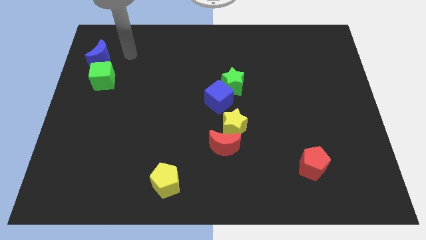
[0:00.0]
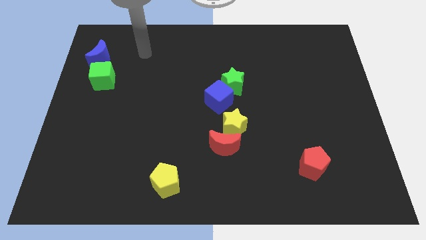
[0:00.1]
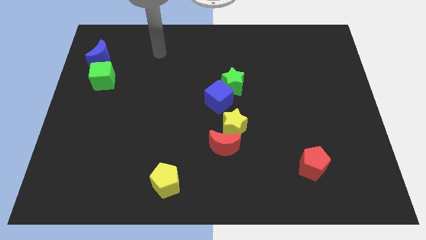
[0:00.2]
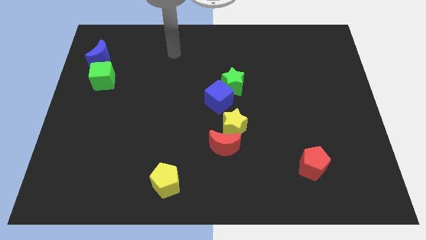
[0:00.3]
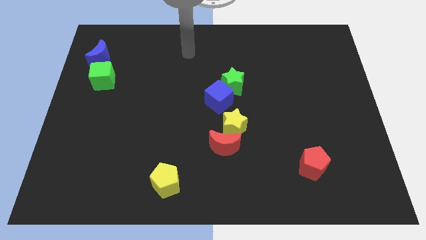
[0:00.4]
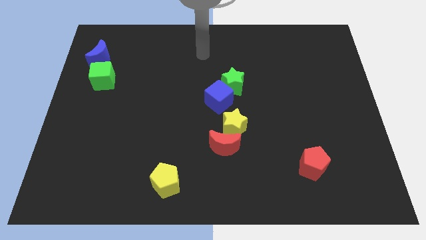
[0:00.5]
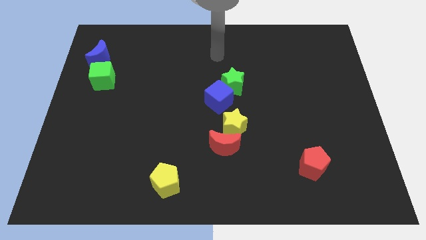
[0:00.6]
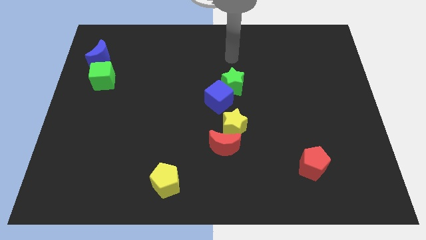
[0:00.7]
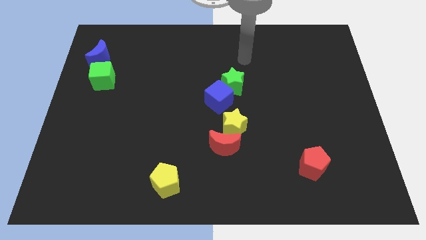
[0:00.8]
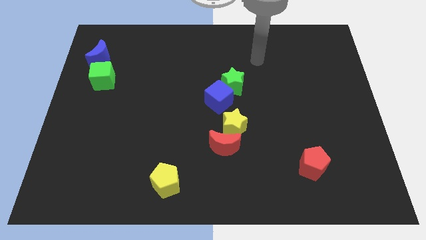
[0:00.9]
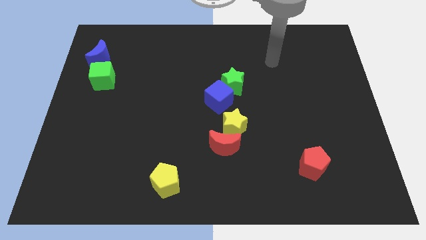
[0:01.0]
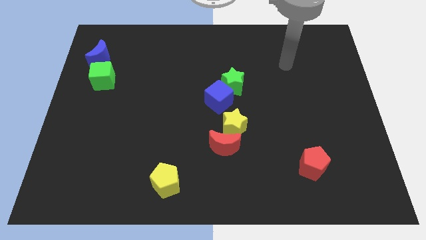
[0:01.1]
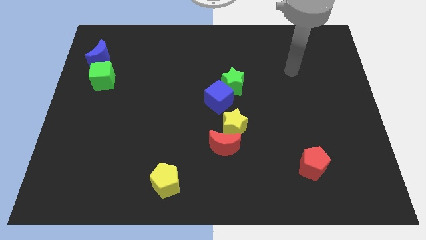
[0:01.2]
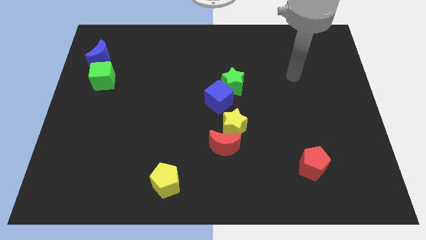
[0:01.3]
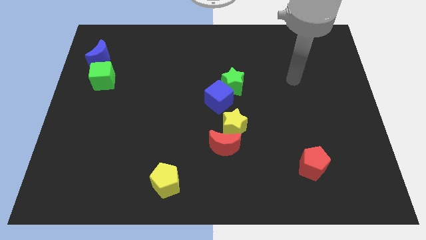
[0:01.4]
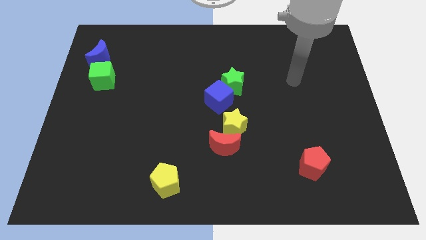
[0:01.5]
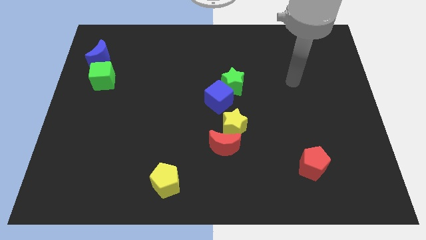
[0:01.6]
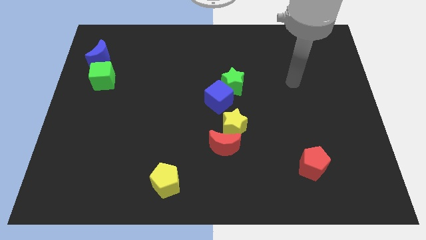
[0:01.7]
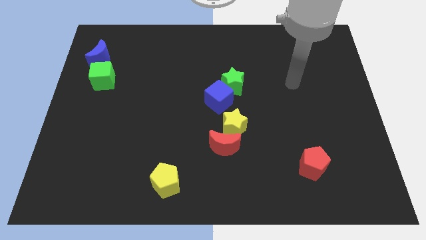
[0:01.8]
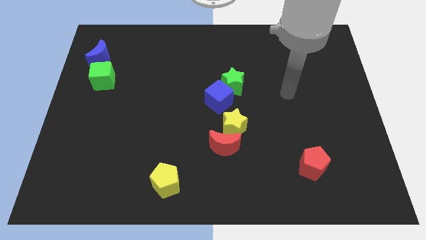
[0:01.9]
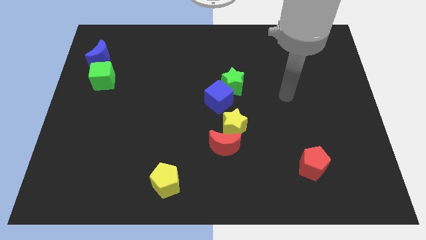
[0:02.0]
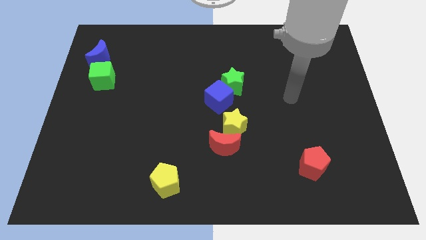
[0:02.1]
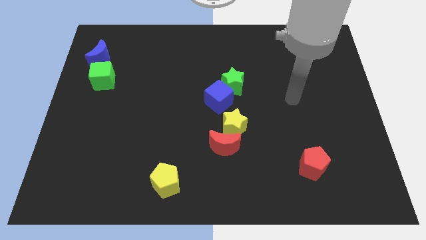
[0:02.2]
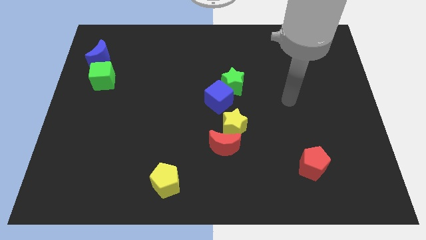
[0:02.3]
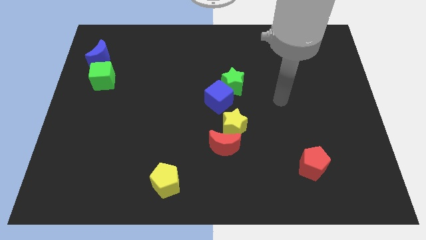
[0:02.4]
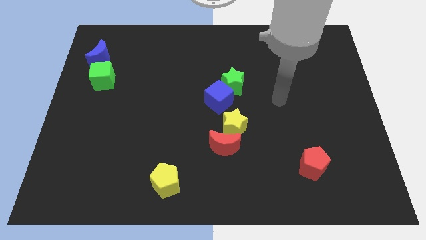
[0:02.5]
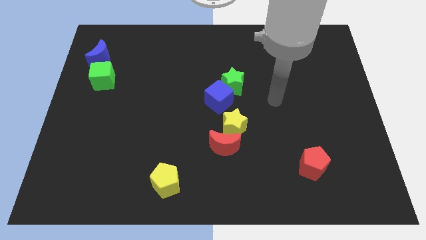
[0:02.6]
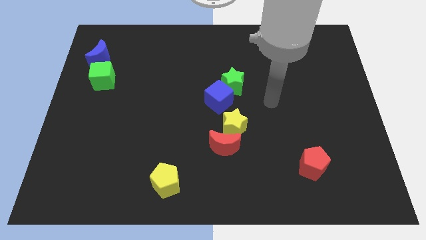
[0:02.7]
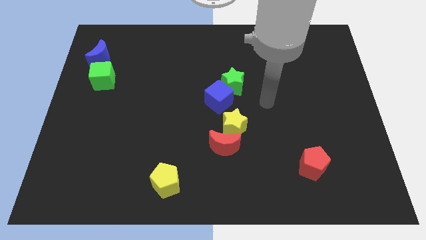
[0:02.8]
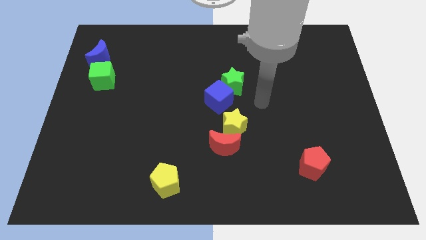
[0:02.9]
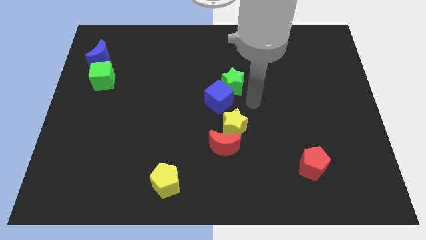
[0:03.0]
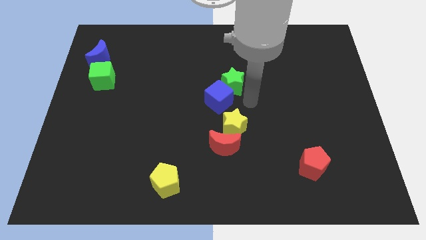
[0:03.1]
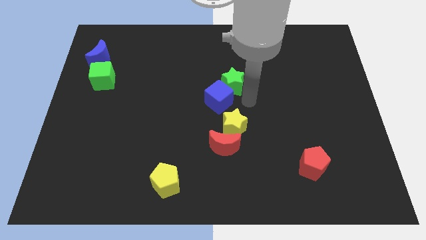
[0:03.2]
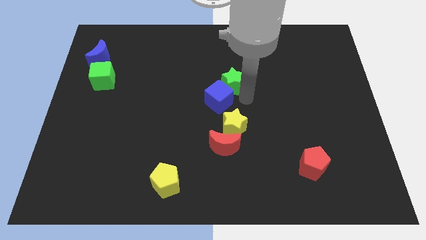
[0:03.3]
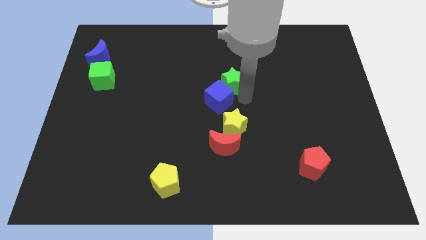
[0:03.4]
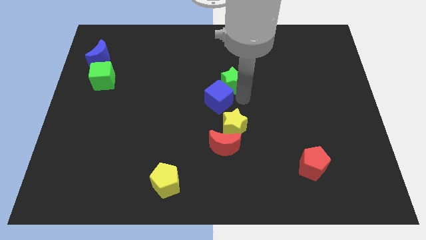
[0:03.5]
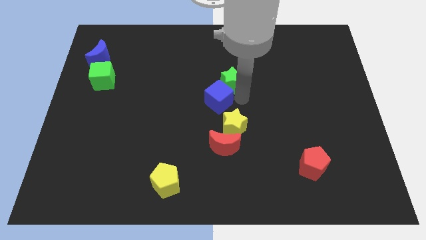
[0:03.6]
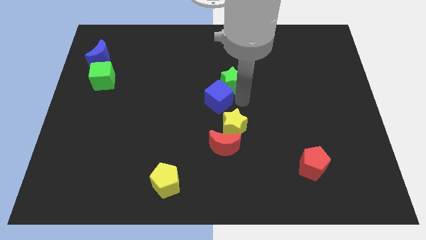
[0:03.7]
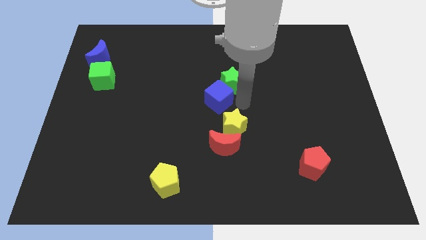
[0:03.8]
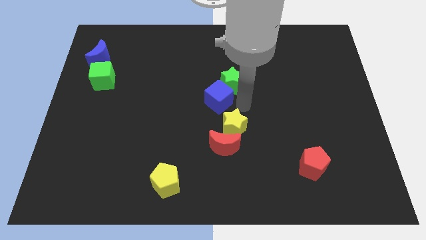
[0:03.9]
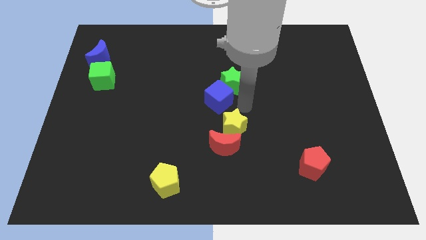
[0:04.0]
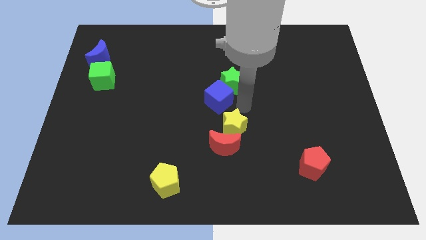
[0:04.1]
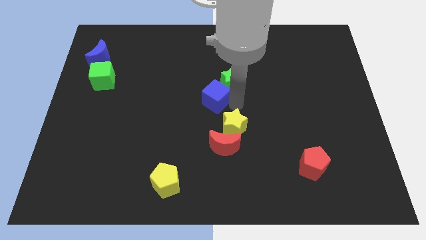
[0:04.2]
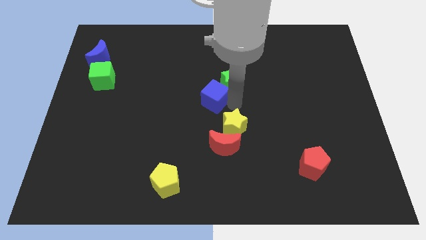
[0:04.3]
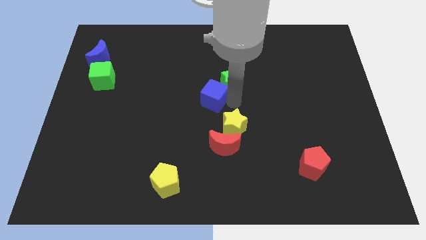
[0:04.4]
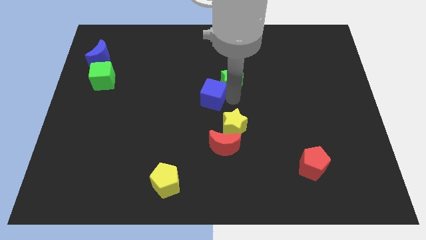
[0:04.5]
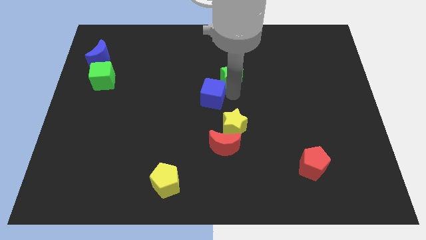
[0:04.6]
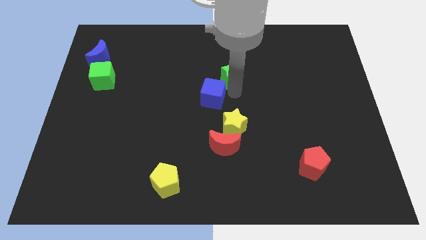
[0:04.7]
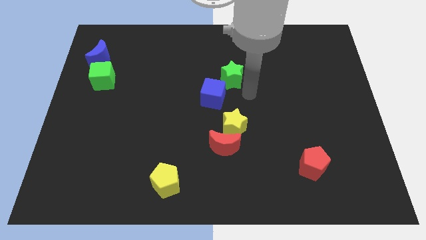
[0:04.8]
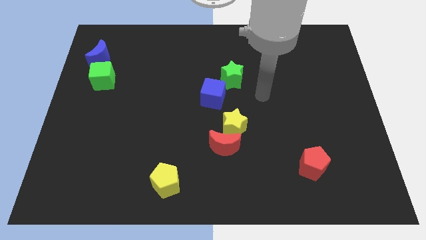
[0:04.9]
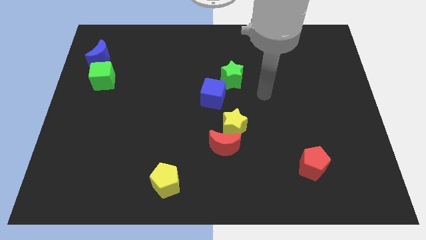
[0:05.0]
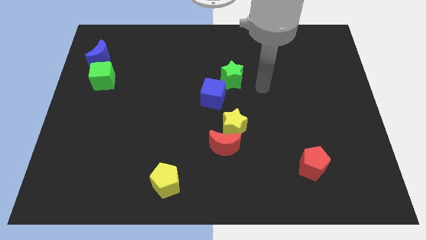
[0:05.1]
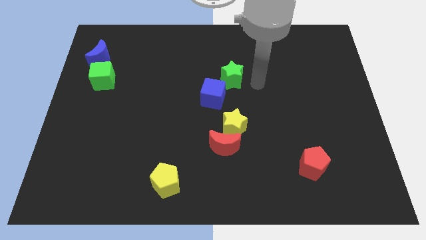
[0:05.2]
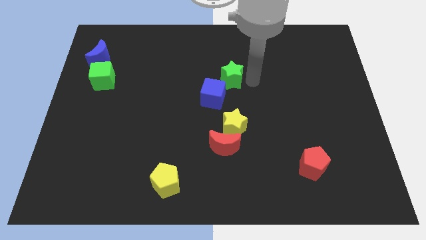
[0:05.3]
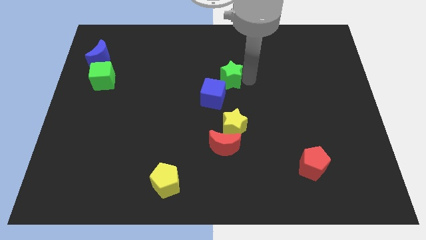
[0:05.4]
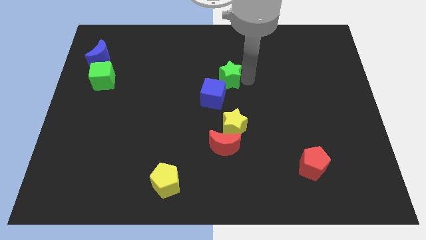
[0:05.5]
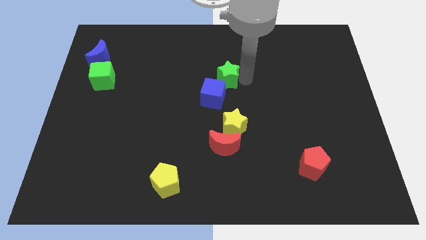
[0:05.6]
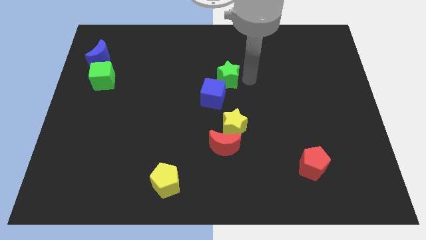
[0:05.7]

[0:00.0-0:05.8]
push the blue cube and green star slightly to the left

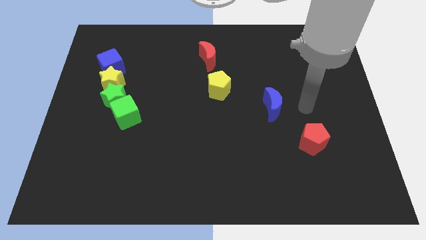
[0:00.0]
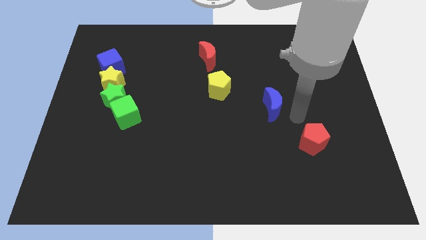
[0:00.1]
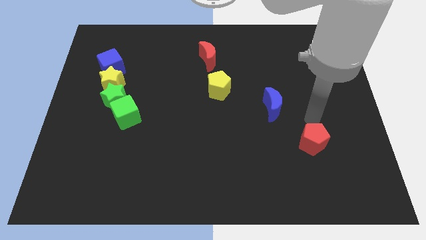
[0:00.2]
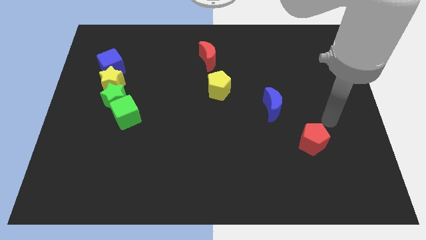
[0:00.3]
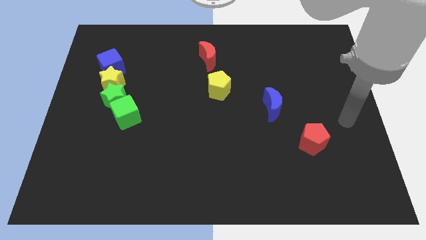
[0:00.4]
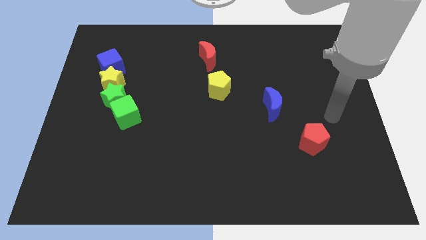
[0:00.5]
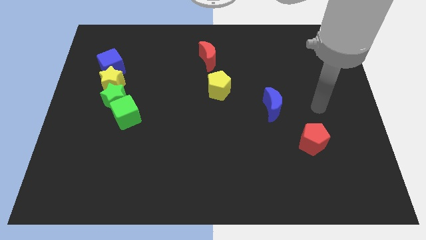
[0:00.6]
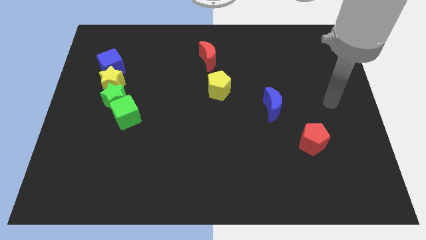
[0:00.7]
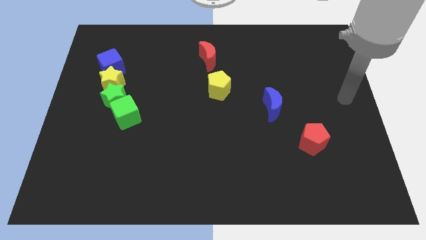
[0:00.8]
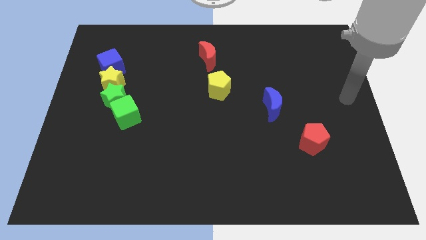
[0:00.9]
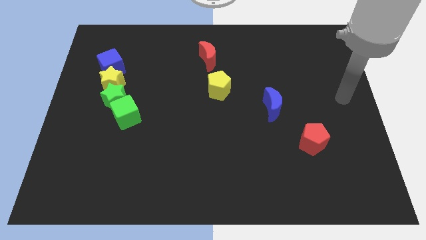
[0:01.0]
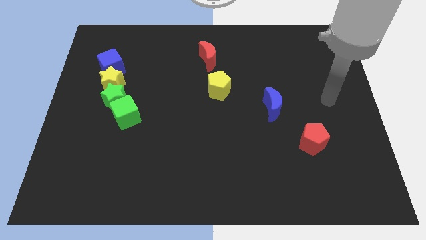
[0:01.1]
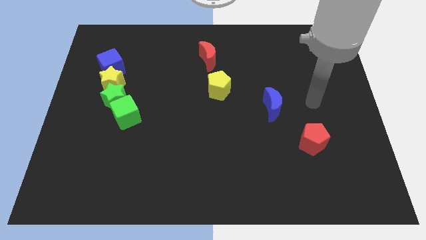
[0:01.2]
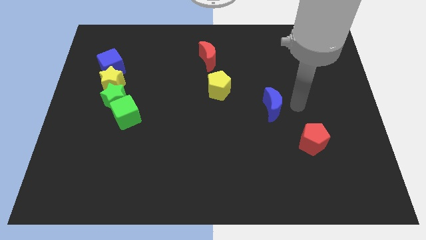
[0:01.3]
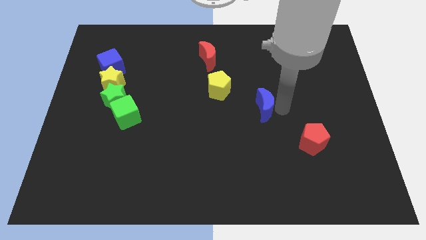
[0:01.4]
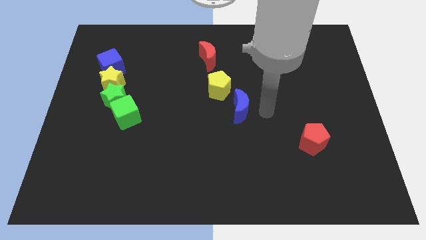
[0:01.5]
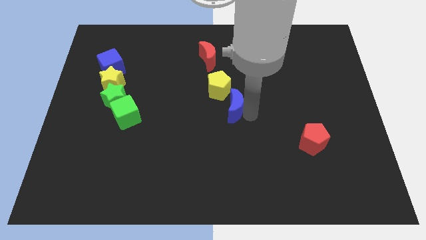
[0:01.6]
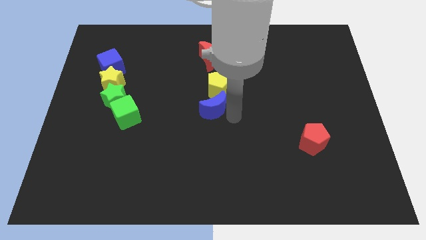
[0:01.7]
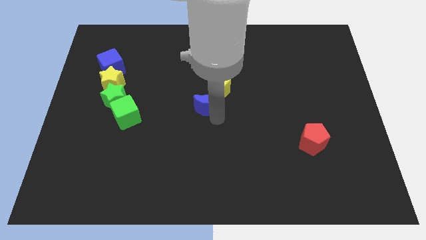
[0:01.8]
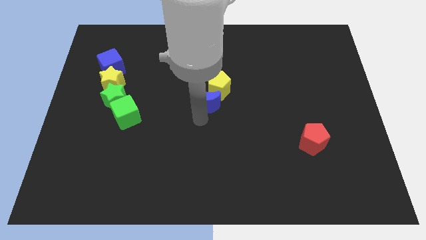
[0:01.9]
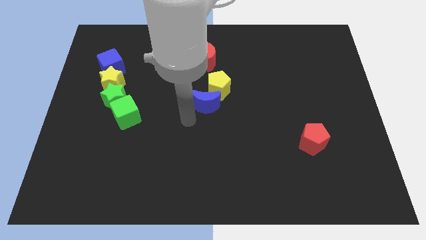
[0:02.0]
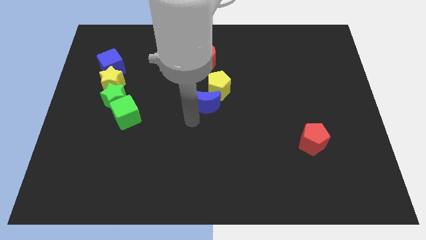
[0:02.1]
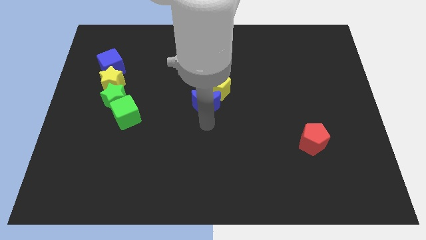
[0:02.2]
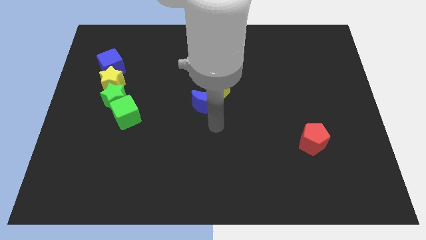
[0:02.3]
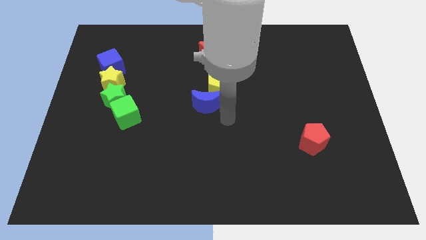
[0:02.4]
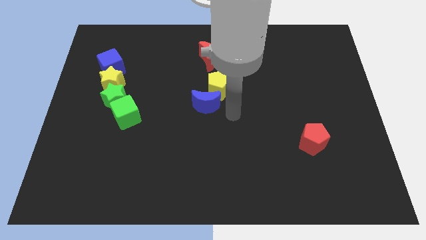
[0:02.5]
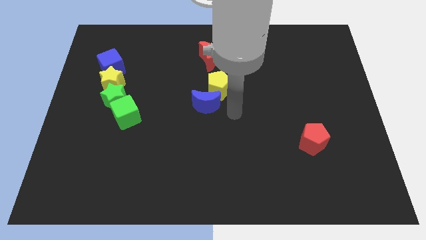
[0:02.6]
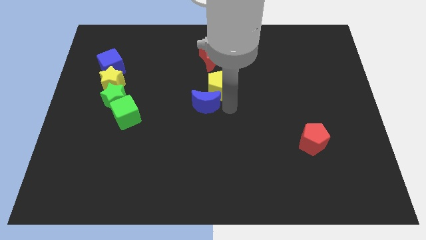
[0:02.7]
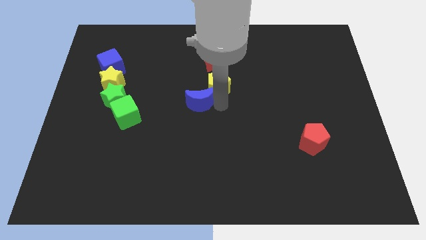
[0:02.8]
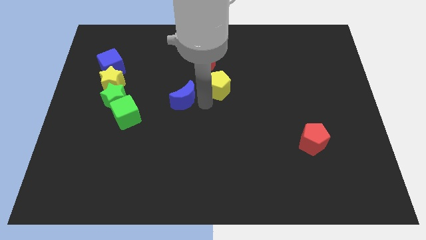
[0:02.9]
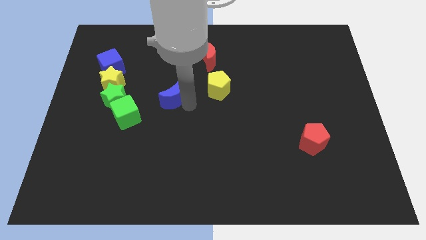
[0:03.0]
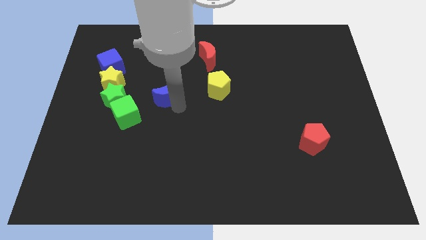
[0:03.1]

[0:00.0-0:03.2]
place the blue moon right to the green cube
